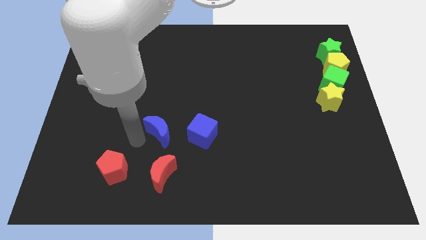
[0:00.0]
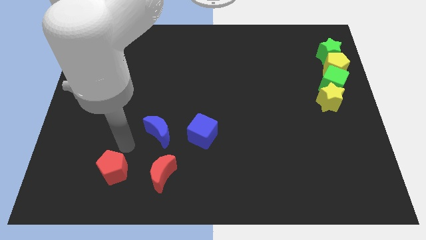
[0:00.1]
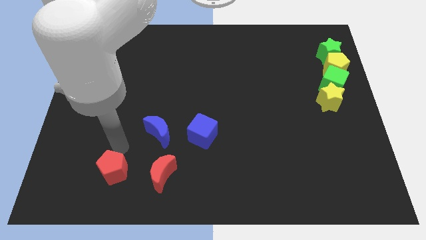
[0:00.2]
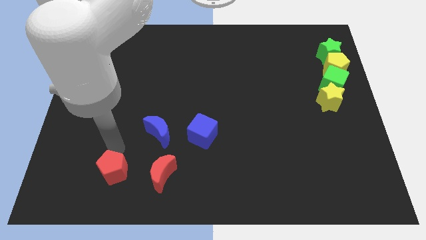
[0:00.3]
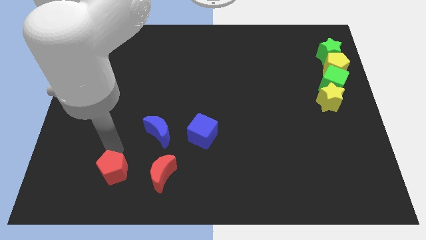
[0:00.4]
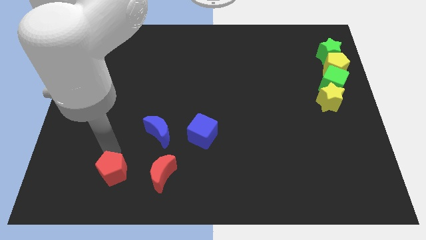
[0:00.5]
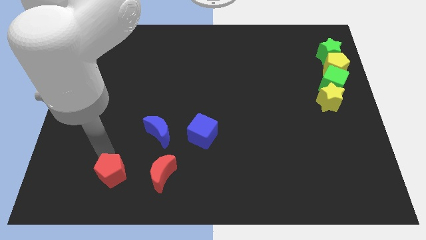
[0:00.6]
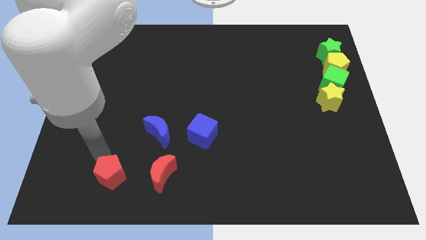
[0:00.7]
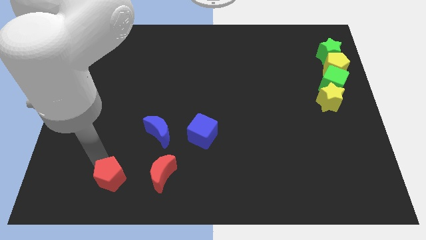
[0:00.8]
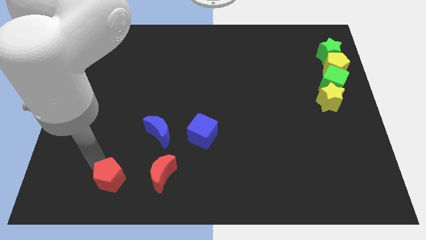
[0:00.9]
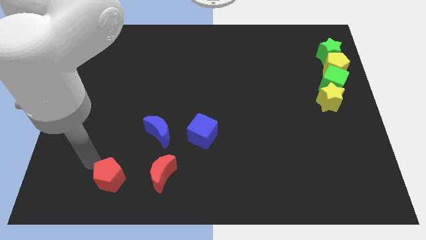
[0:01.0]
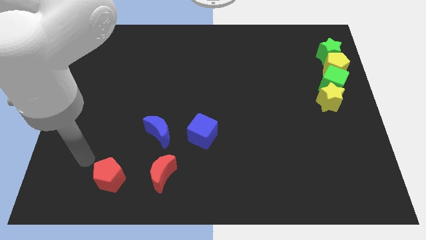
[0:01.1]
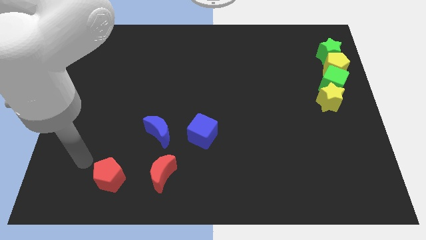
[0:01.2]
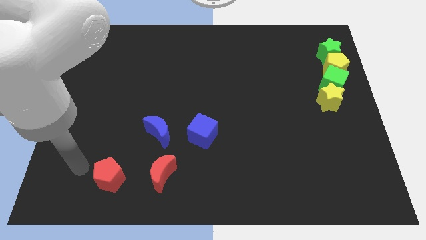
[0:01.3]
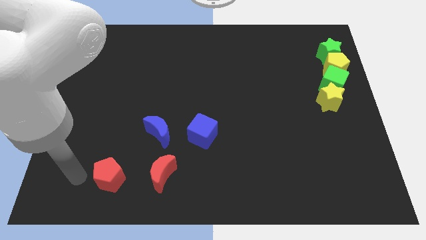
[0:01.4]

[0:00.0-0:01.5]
push the red pentagon slightly to the bottom of the board

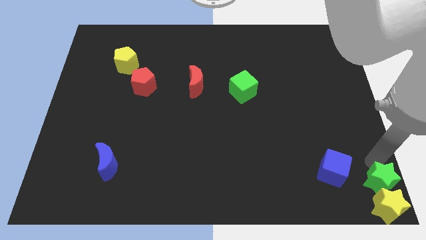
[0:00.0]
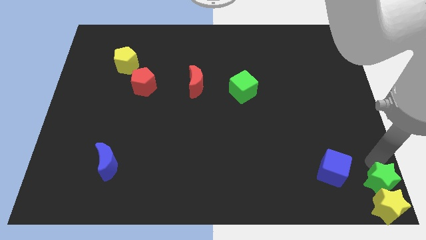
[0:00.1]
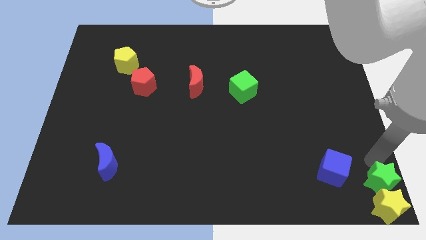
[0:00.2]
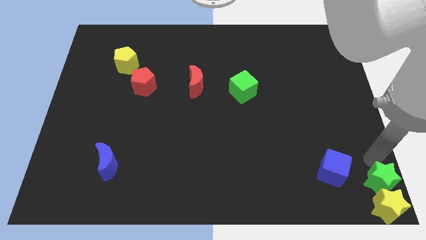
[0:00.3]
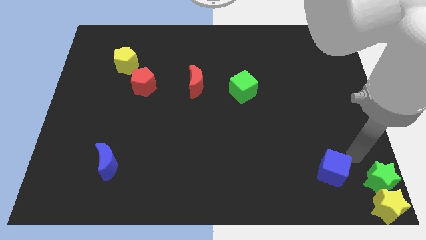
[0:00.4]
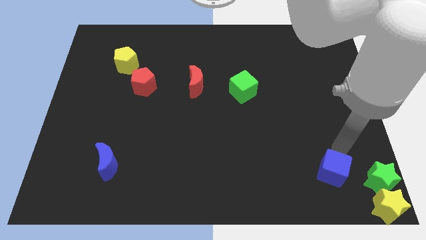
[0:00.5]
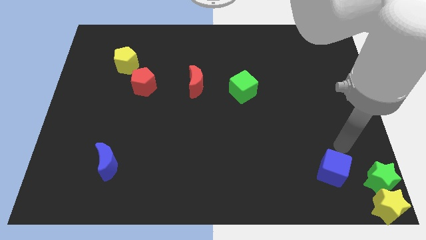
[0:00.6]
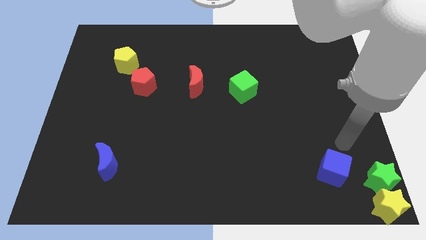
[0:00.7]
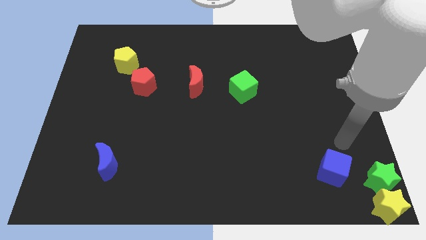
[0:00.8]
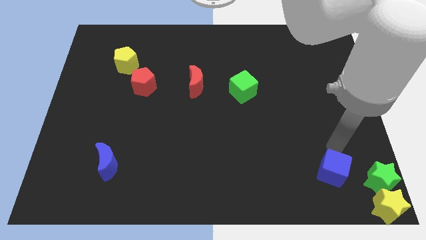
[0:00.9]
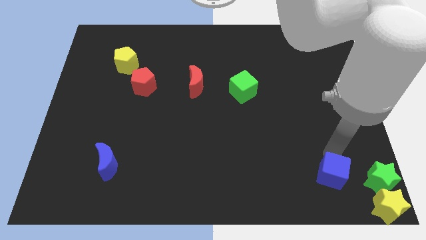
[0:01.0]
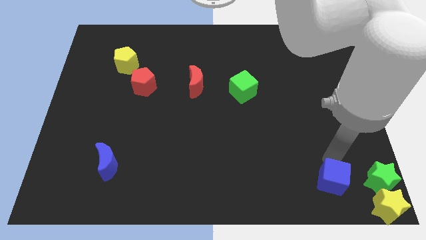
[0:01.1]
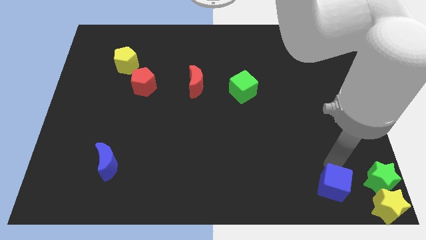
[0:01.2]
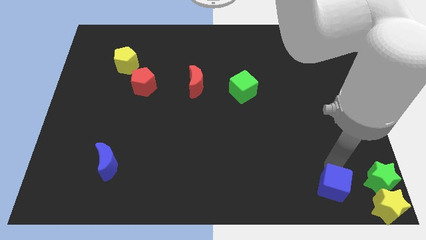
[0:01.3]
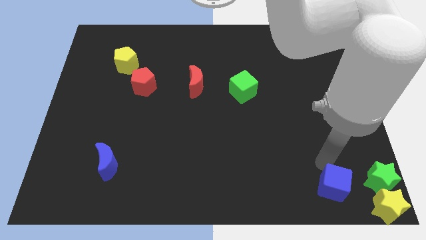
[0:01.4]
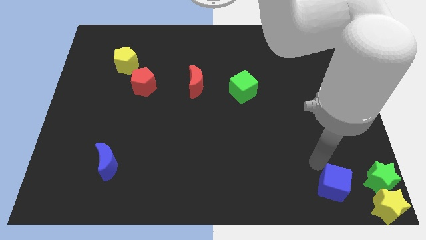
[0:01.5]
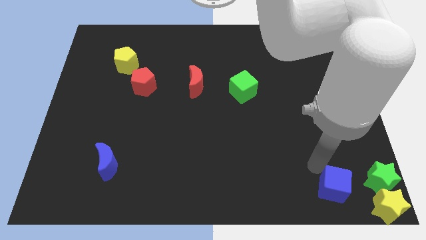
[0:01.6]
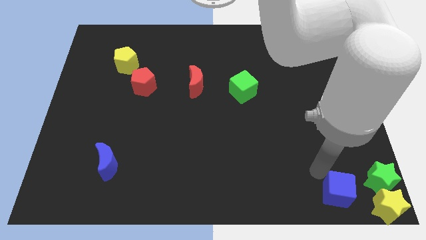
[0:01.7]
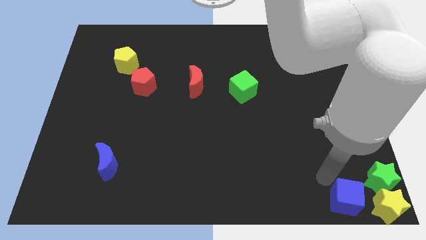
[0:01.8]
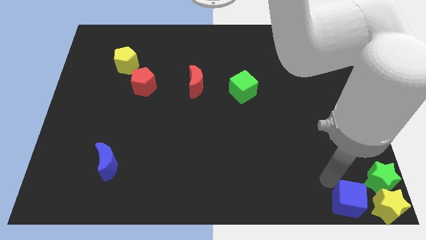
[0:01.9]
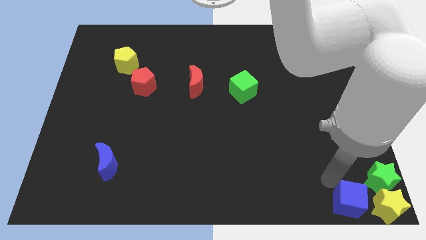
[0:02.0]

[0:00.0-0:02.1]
place the blue cube to the left of the yellow star

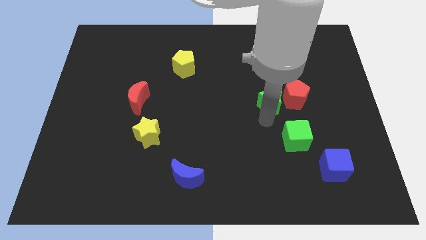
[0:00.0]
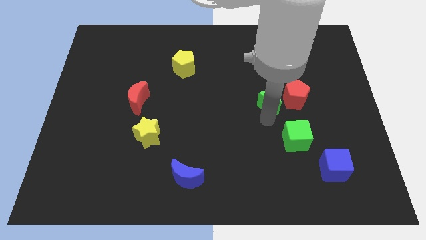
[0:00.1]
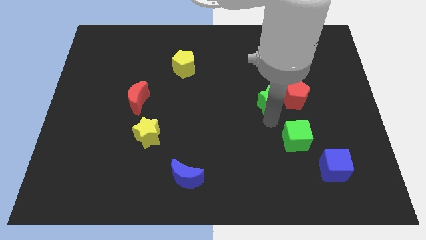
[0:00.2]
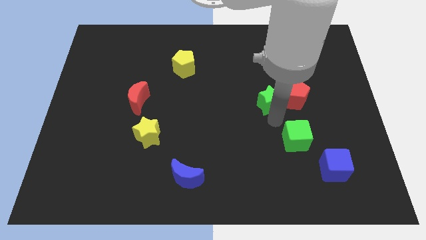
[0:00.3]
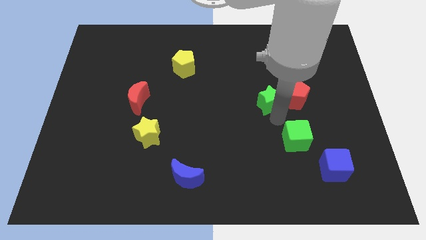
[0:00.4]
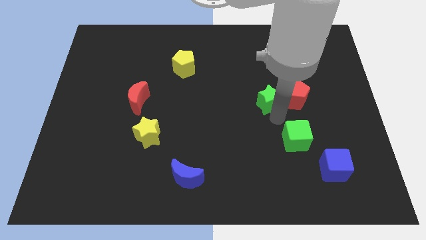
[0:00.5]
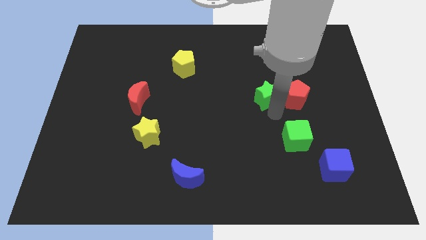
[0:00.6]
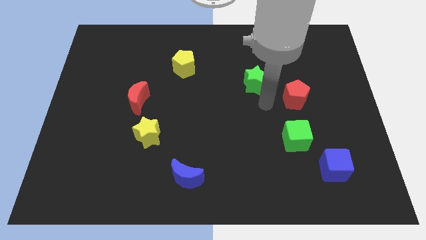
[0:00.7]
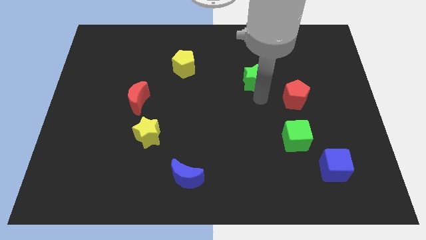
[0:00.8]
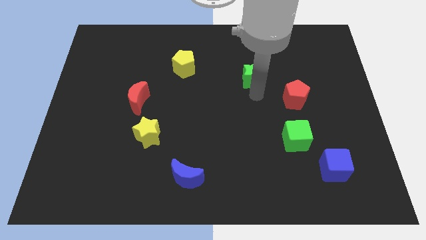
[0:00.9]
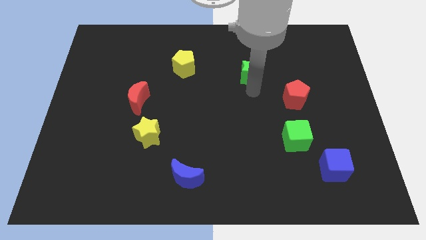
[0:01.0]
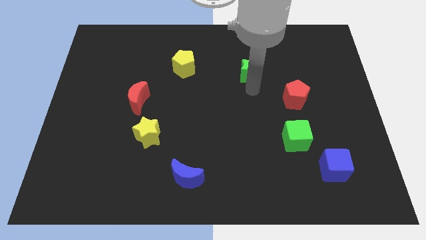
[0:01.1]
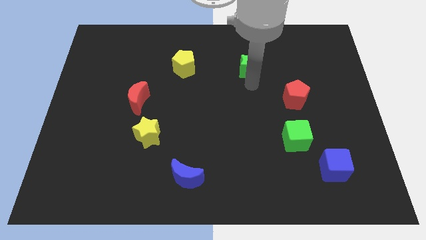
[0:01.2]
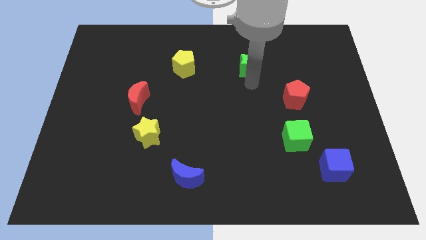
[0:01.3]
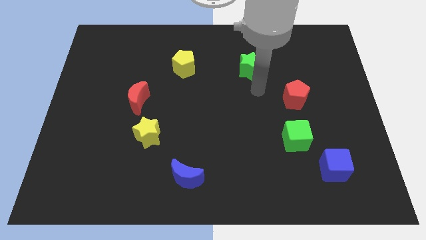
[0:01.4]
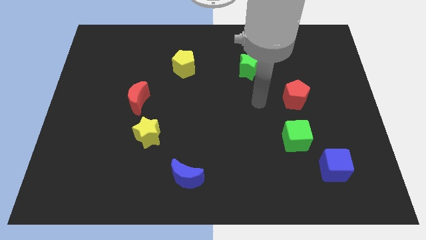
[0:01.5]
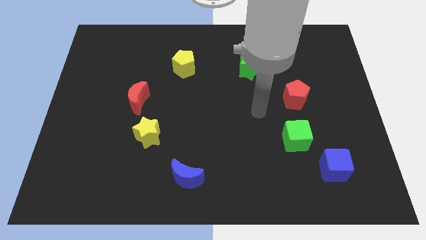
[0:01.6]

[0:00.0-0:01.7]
place the green star right to the yellow pentagon

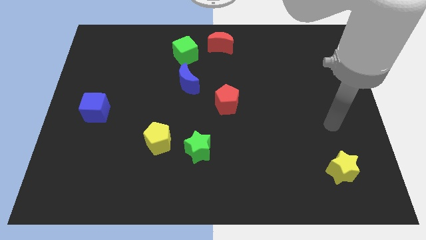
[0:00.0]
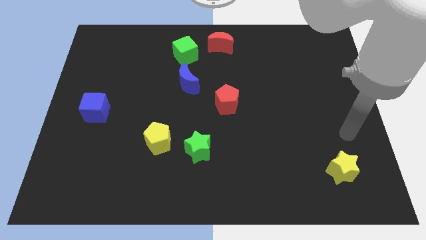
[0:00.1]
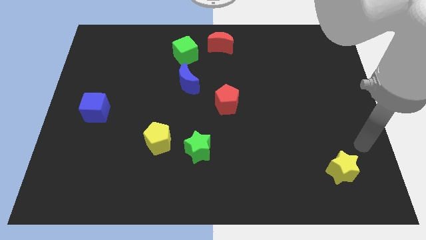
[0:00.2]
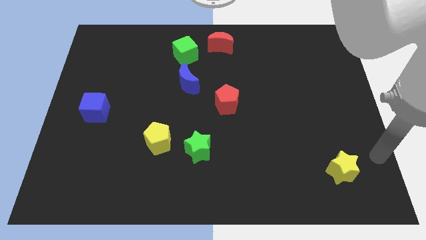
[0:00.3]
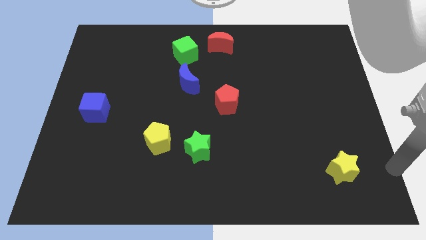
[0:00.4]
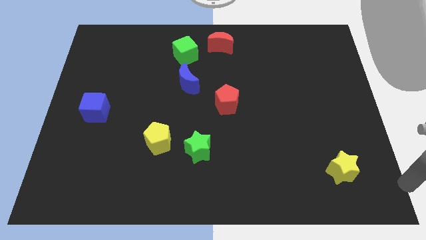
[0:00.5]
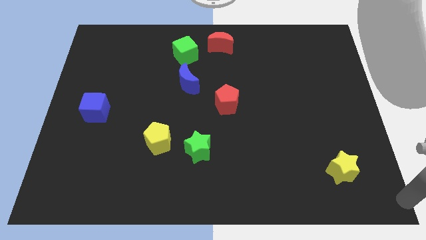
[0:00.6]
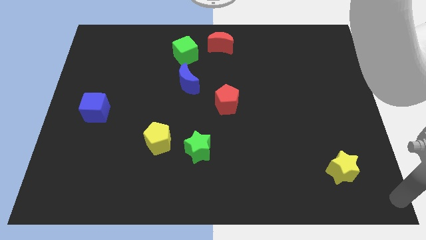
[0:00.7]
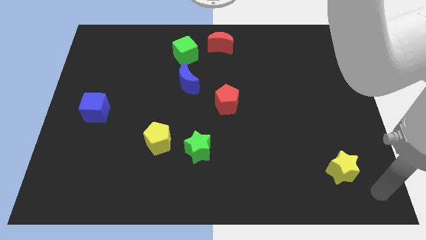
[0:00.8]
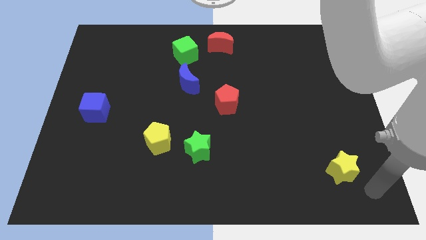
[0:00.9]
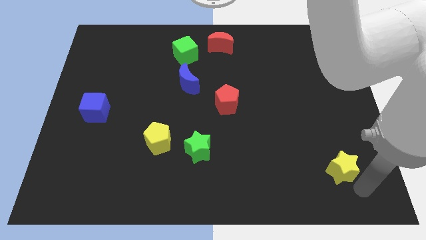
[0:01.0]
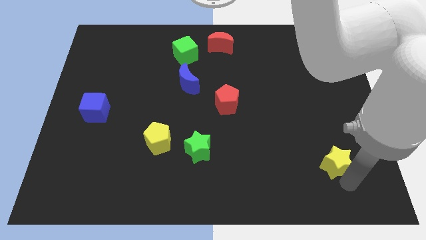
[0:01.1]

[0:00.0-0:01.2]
move arm towards the yellow star

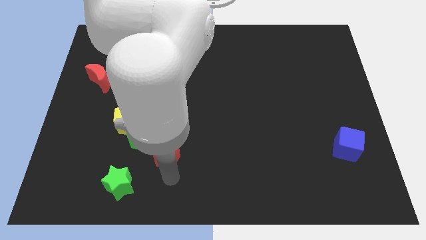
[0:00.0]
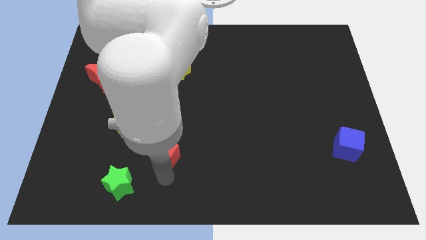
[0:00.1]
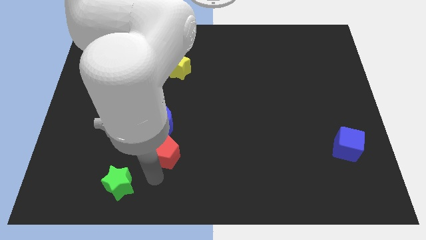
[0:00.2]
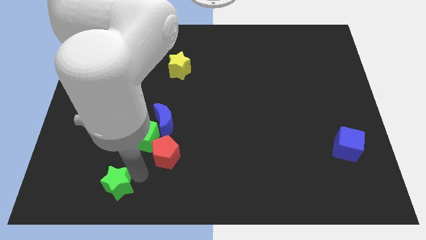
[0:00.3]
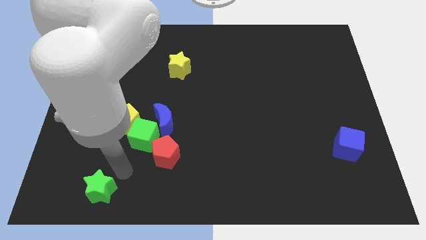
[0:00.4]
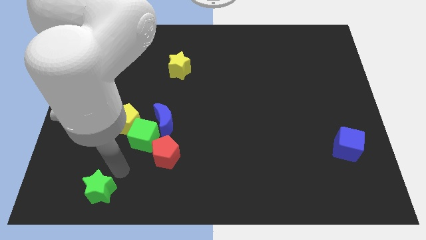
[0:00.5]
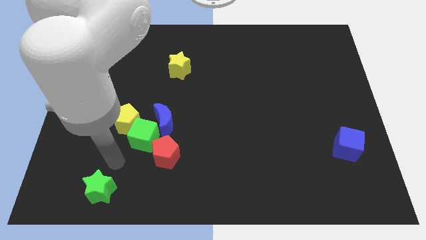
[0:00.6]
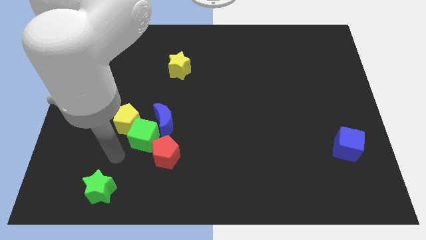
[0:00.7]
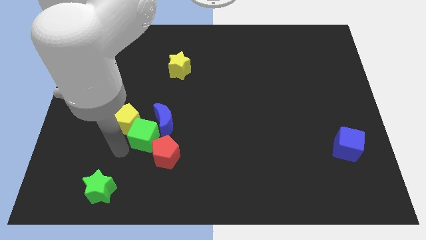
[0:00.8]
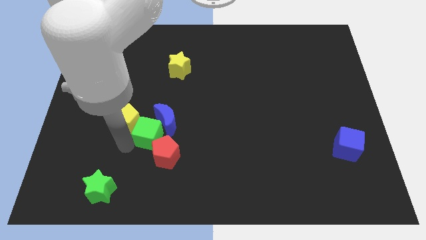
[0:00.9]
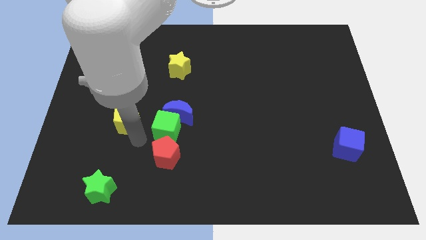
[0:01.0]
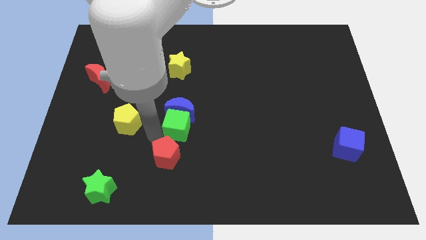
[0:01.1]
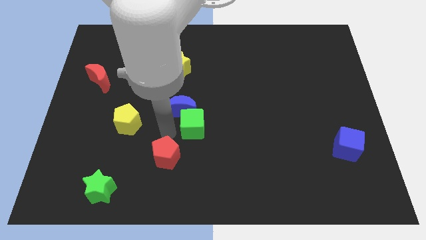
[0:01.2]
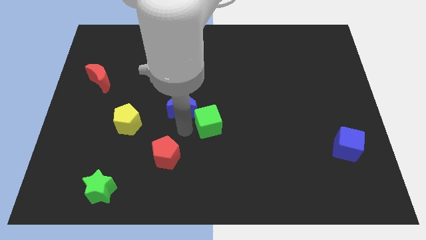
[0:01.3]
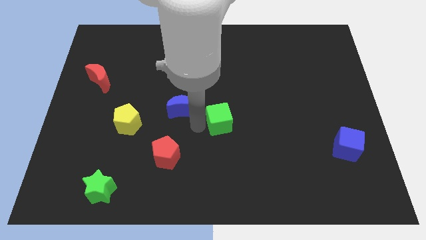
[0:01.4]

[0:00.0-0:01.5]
place the green star diagonal to the red pentagon

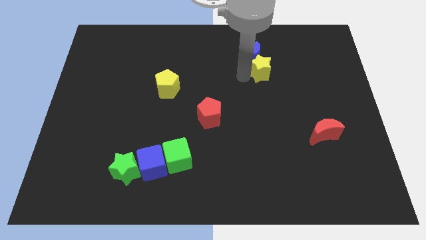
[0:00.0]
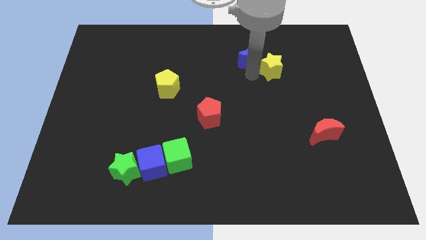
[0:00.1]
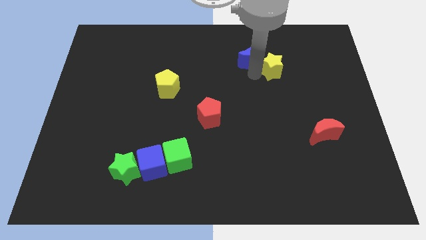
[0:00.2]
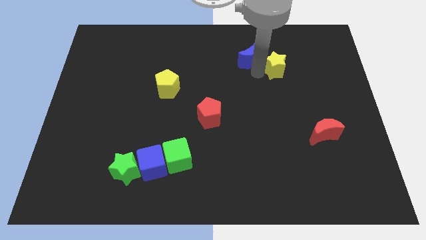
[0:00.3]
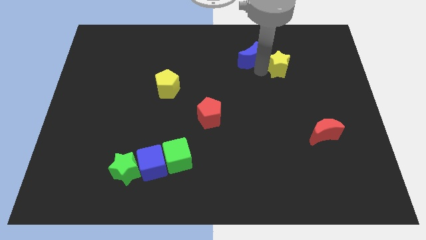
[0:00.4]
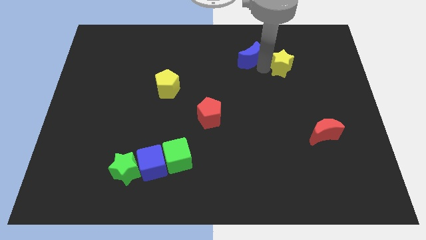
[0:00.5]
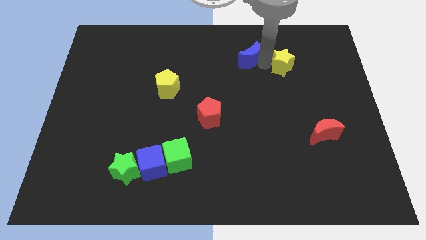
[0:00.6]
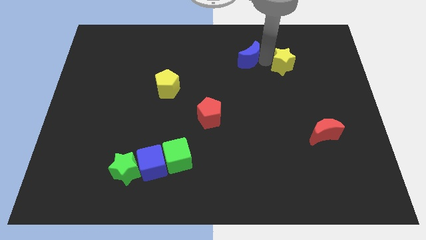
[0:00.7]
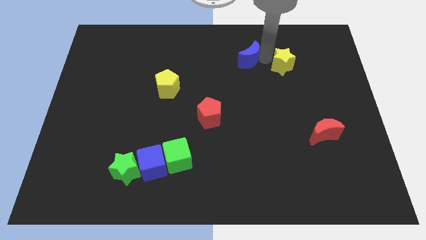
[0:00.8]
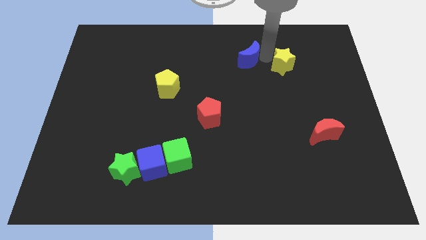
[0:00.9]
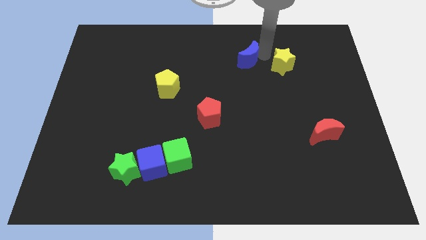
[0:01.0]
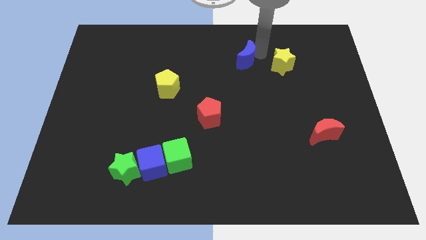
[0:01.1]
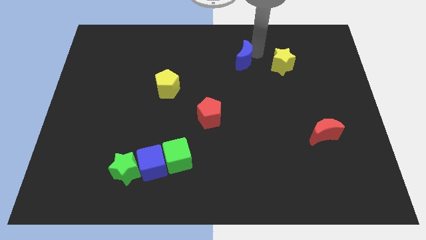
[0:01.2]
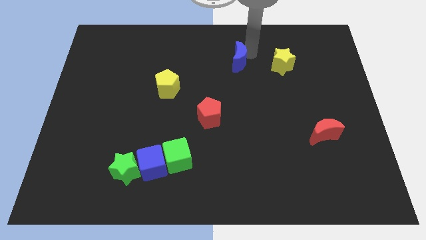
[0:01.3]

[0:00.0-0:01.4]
split yellow star and blue moon from each other
